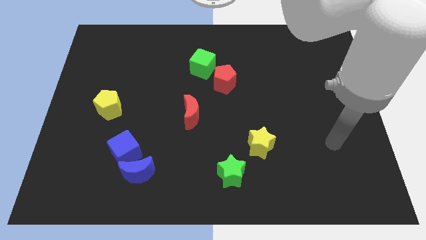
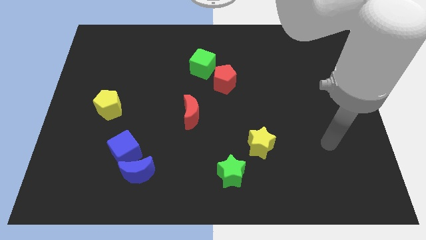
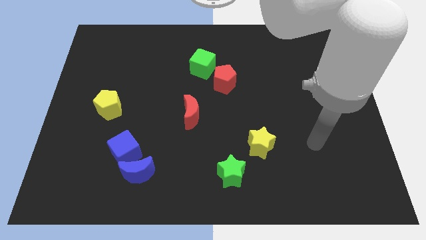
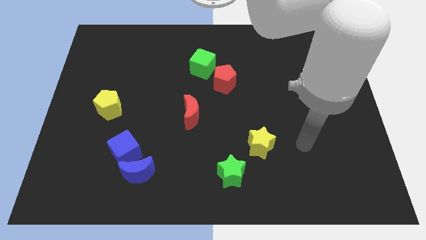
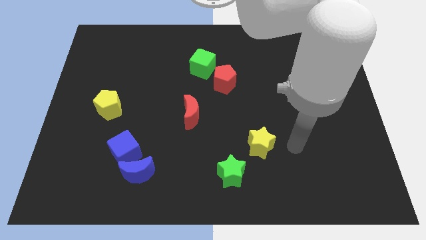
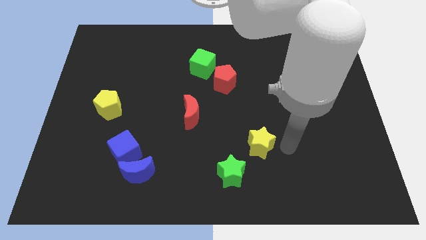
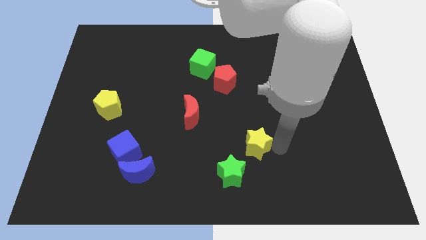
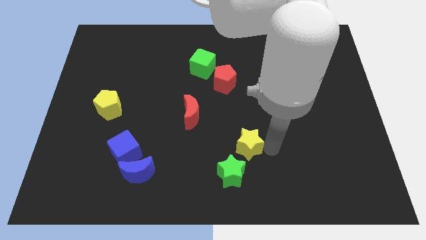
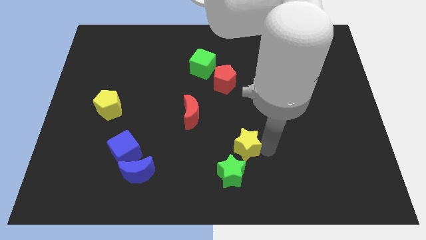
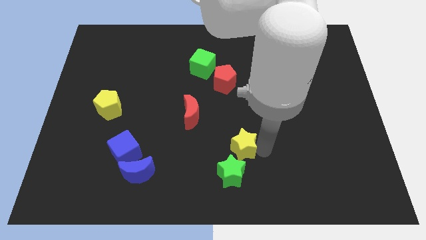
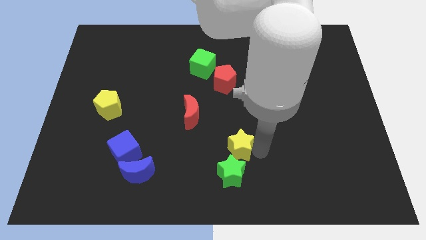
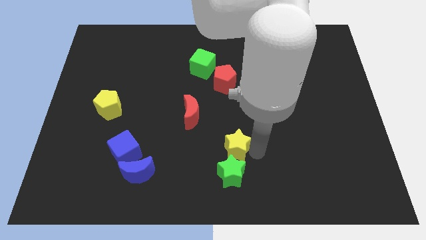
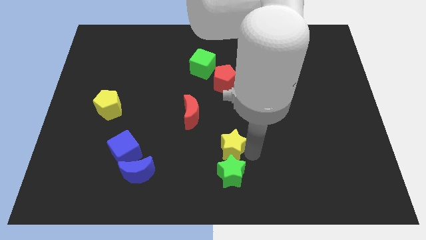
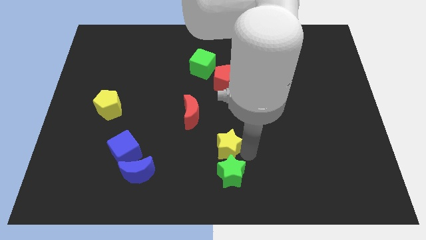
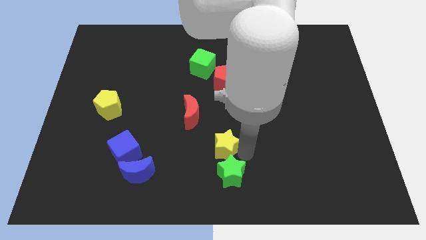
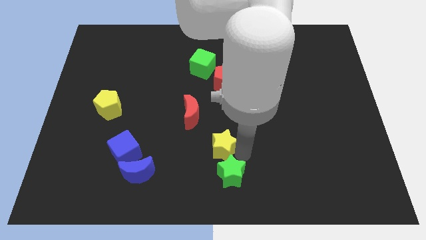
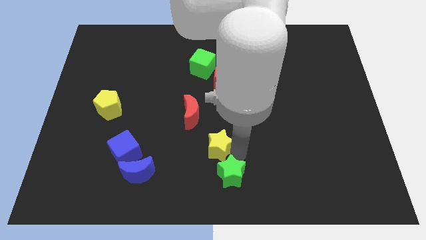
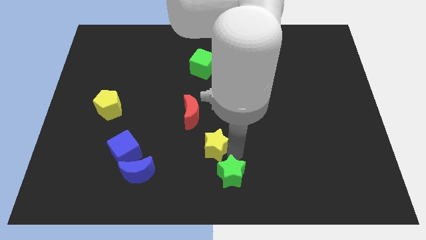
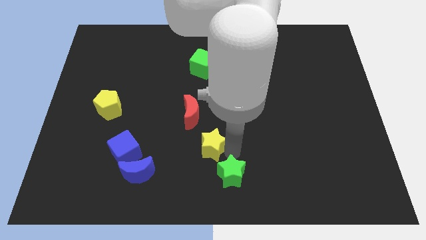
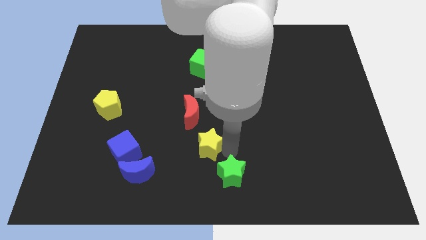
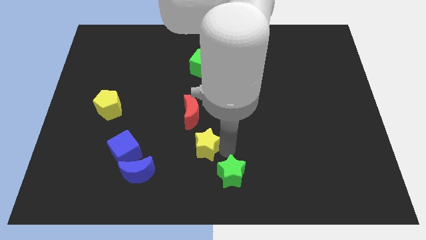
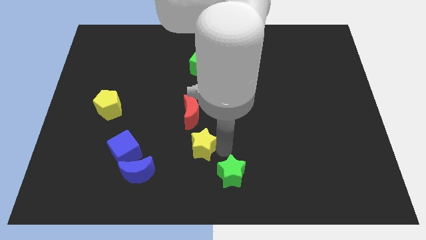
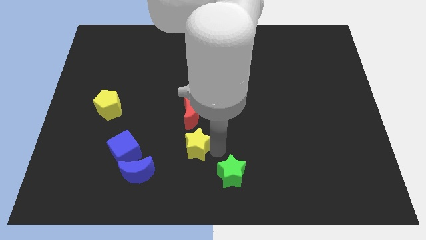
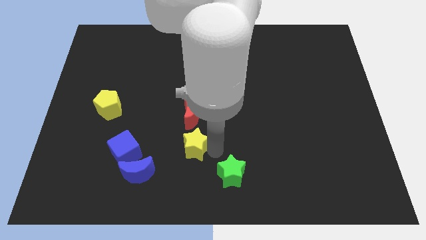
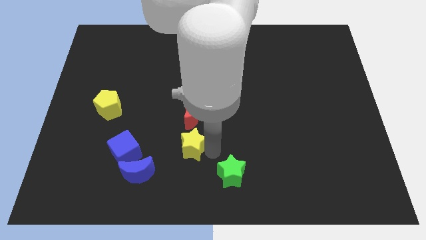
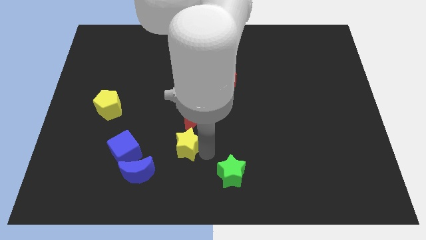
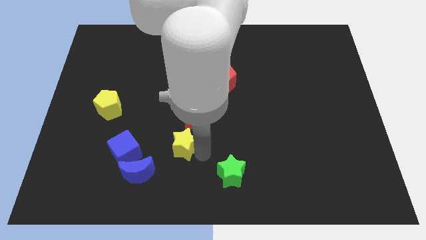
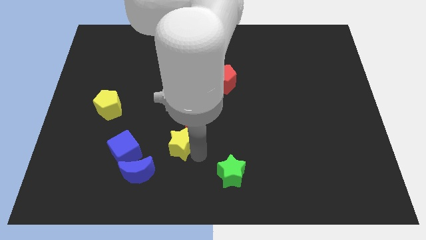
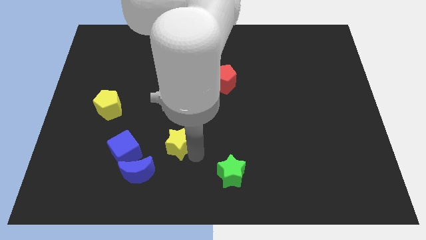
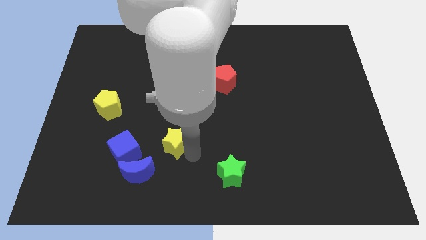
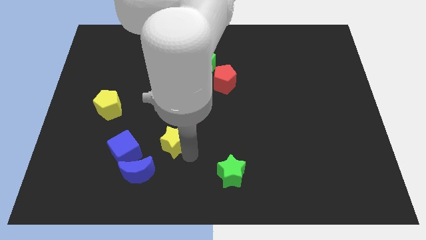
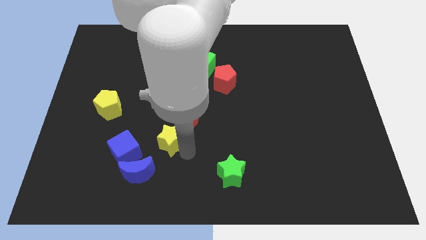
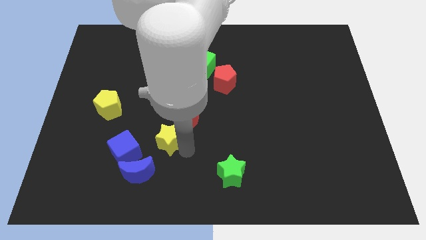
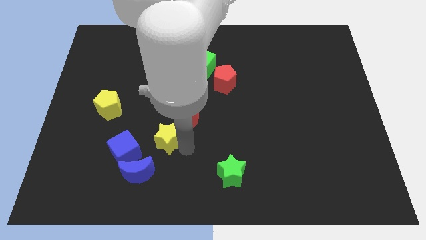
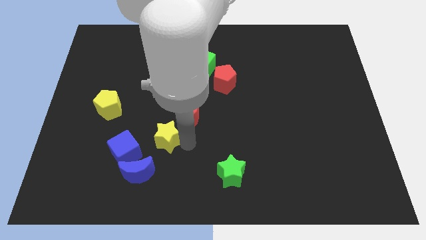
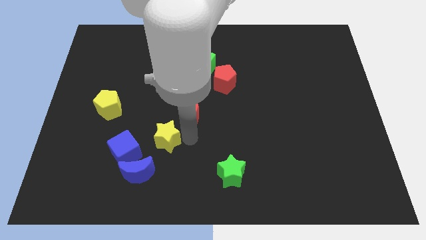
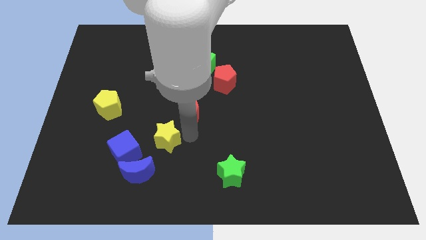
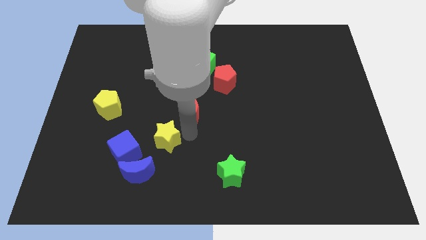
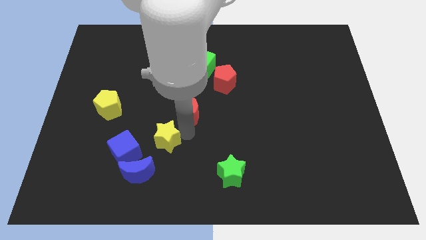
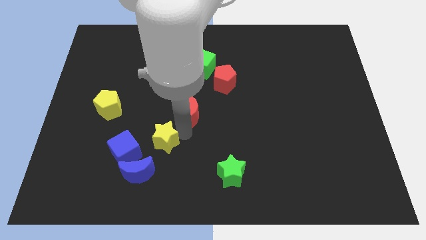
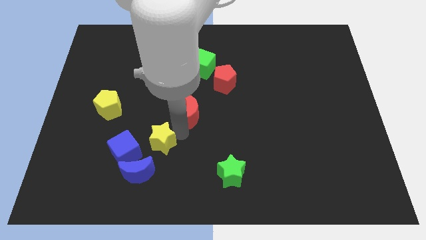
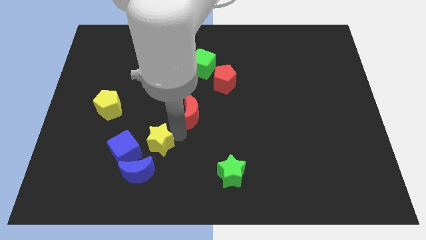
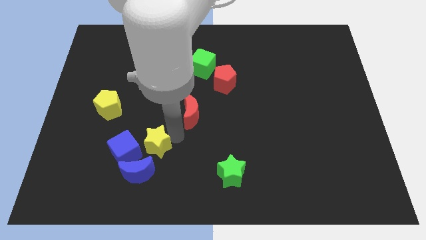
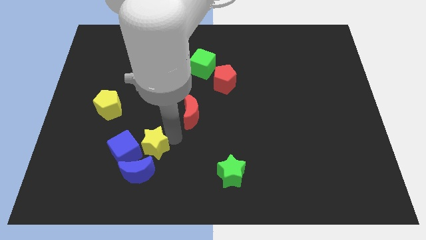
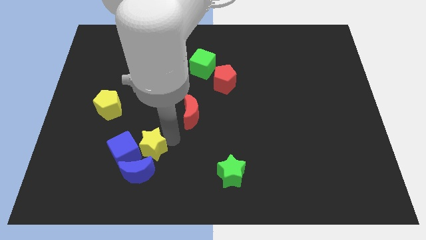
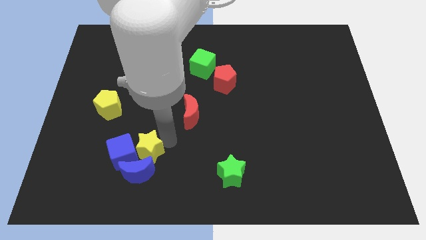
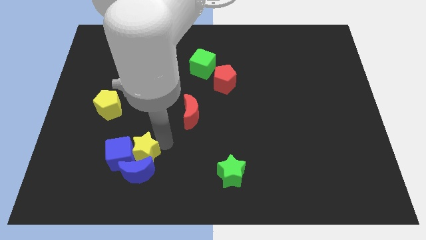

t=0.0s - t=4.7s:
move the yellow star to the blue cube

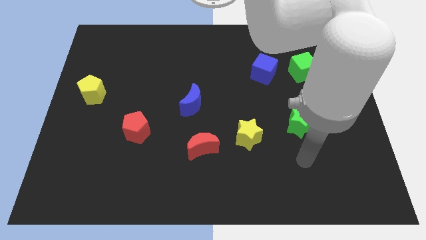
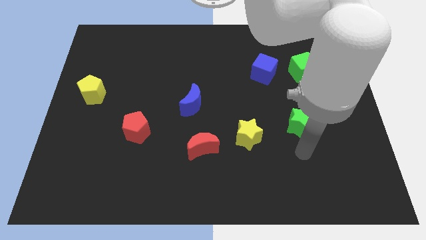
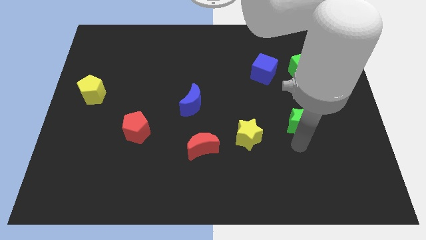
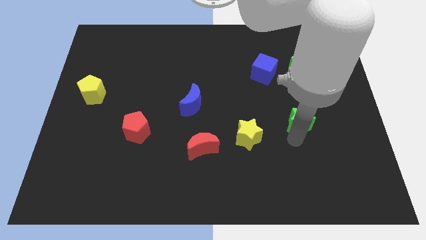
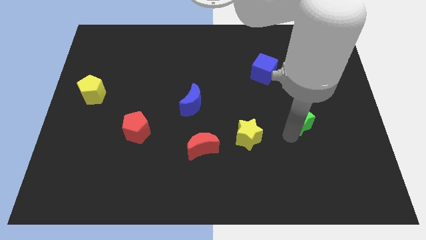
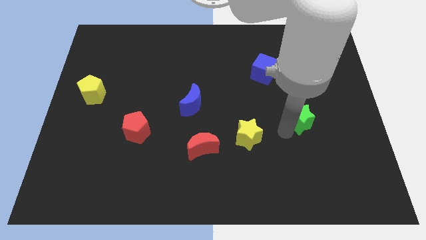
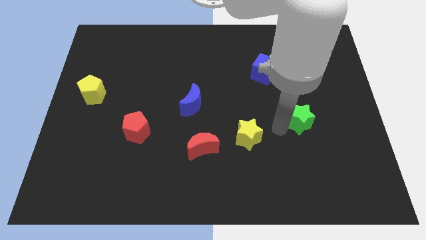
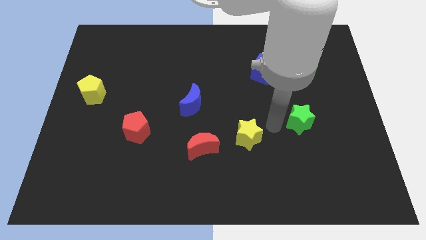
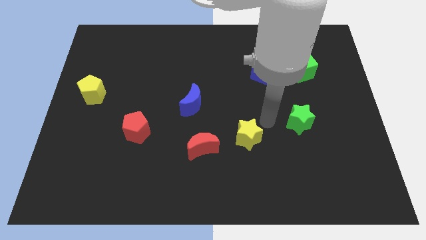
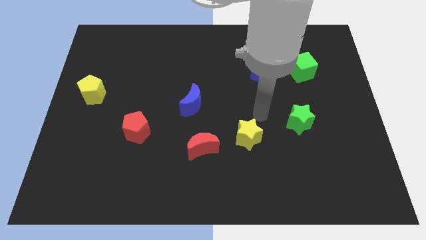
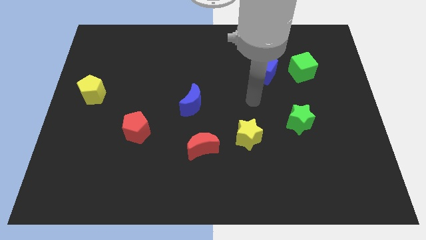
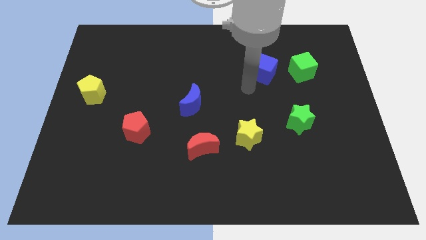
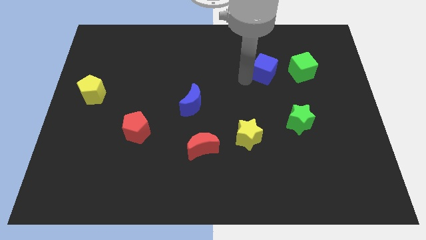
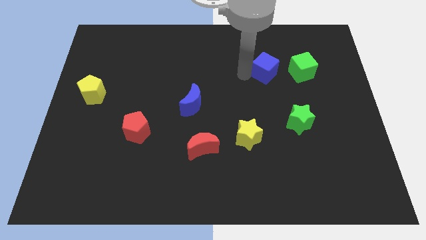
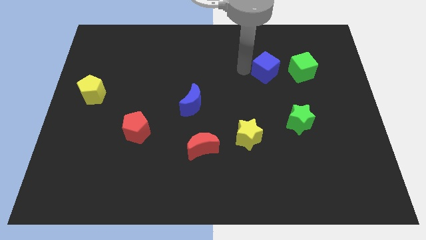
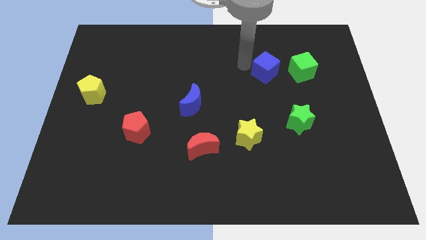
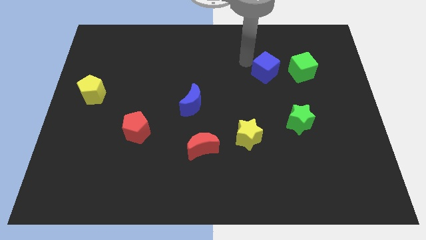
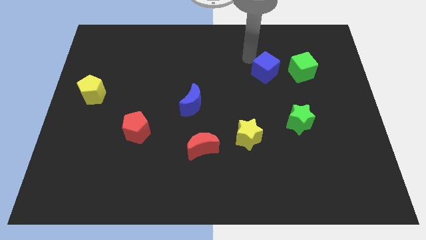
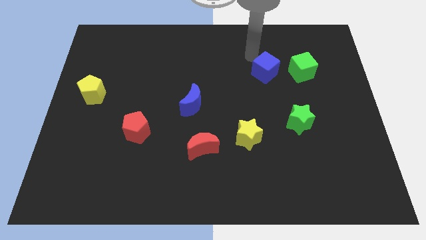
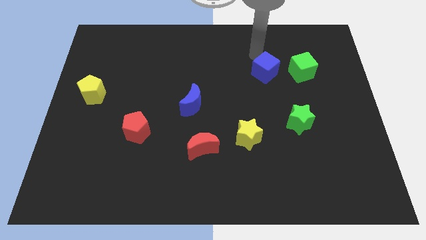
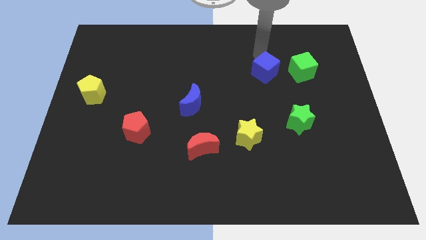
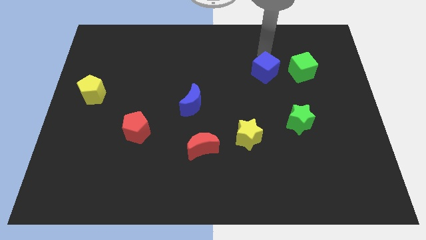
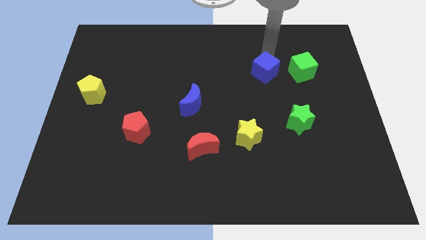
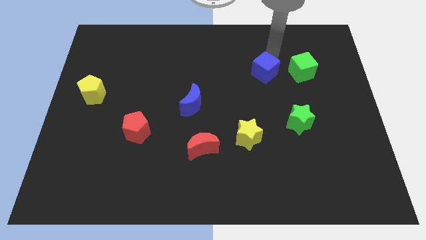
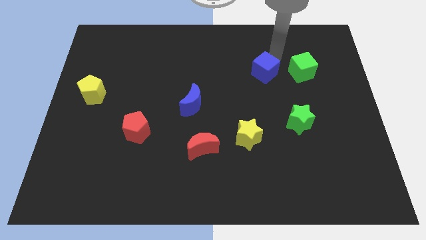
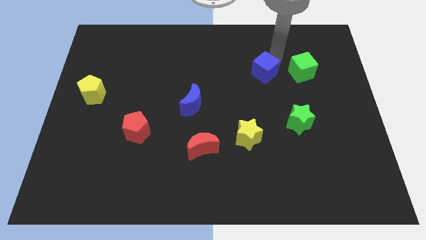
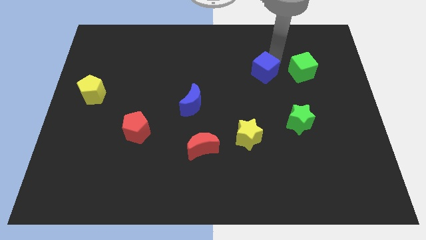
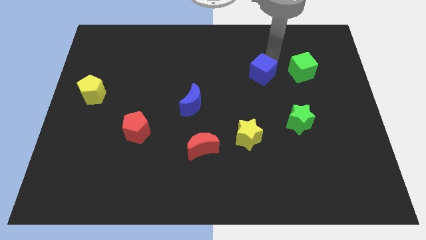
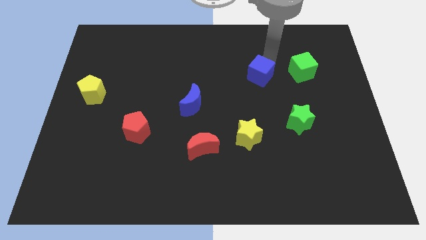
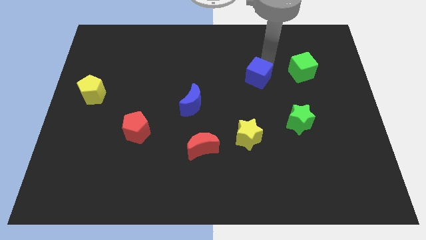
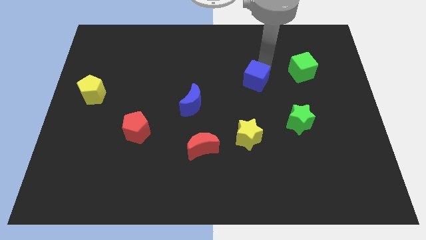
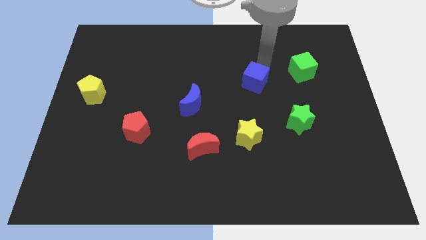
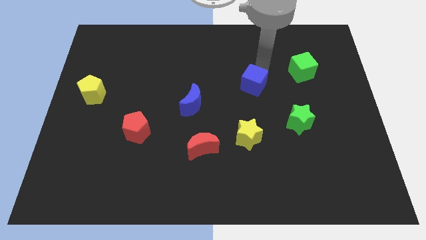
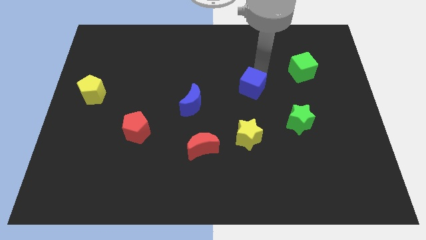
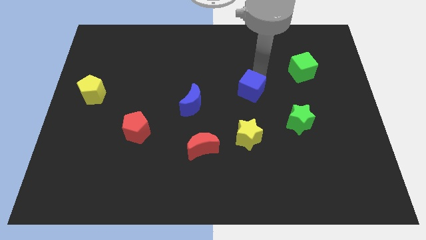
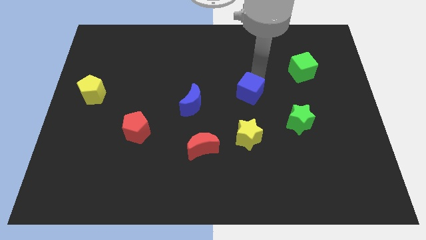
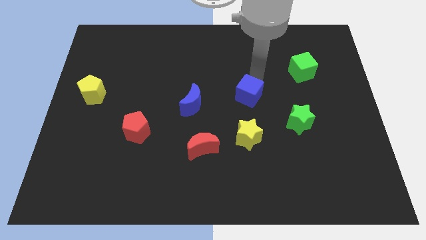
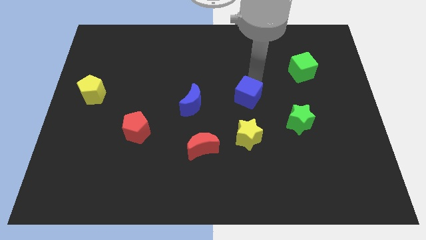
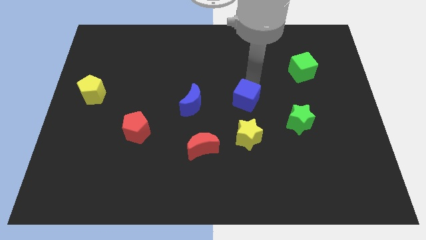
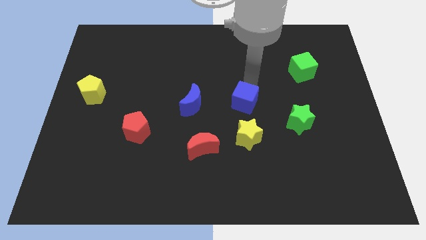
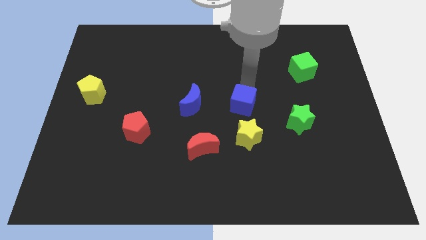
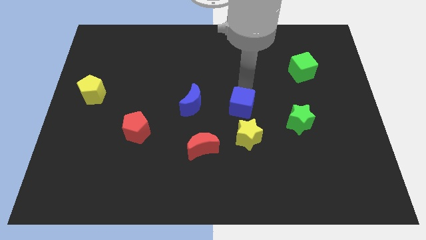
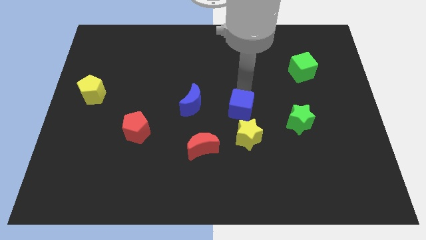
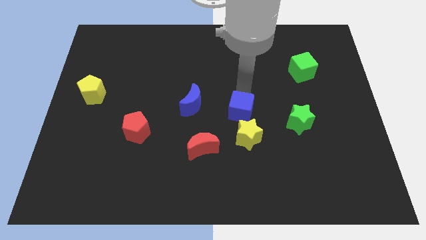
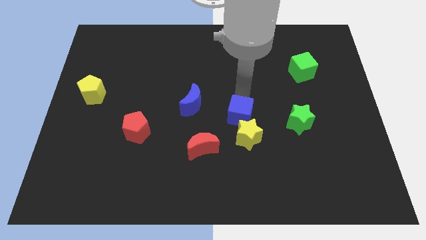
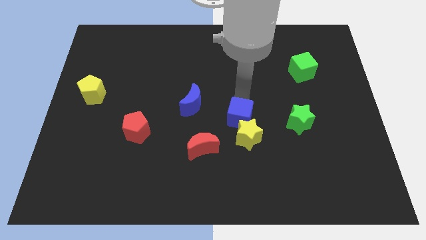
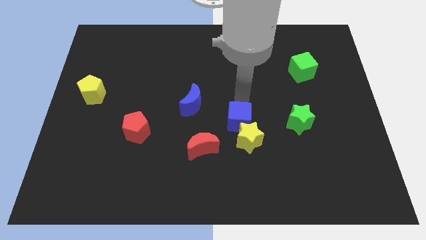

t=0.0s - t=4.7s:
put the blue cube towards the yellow star
